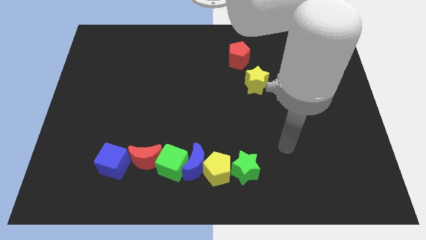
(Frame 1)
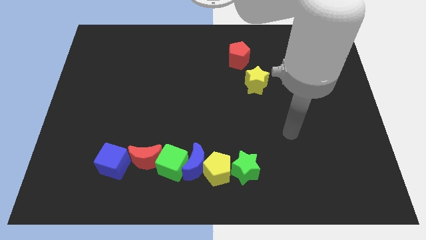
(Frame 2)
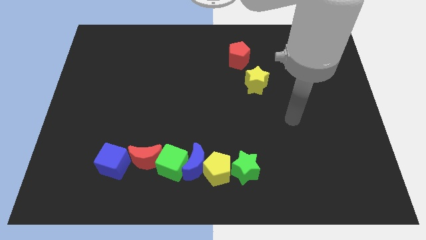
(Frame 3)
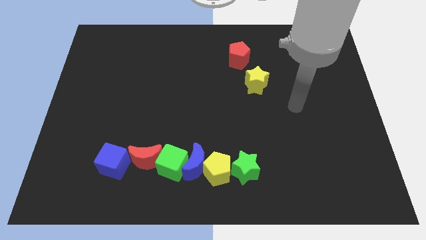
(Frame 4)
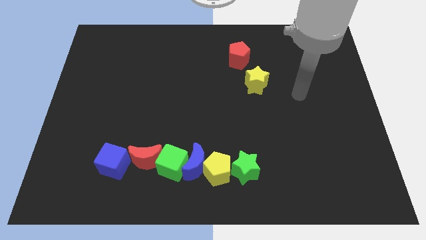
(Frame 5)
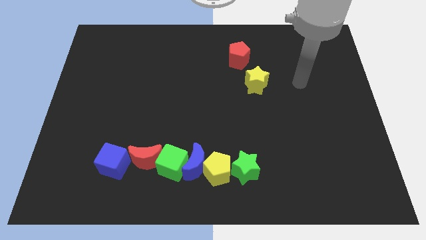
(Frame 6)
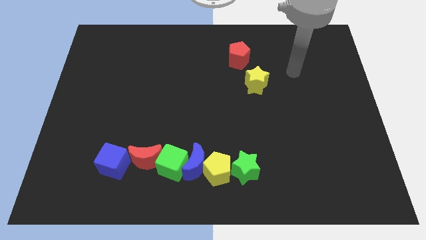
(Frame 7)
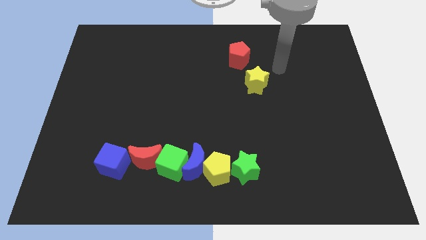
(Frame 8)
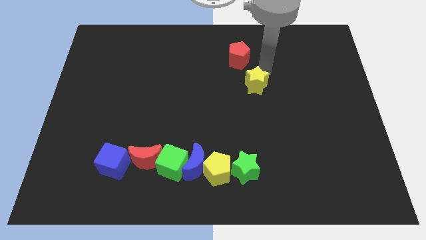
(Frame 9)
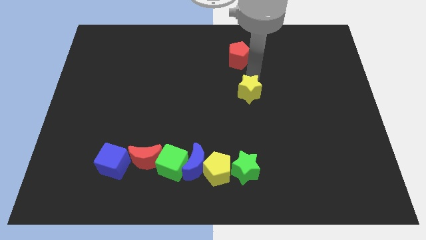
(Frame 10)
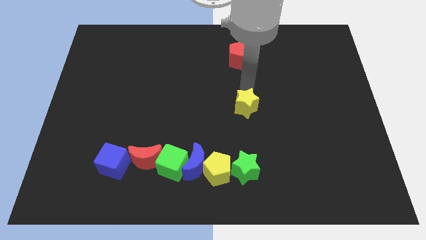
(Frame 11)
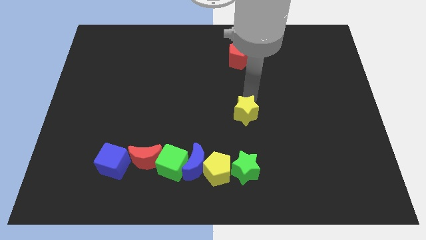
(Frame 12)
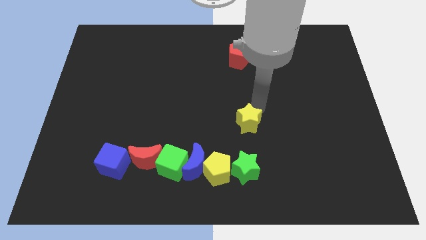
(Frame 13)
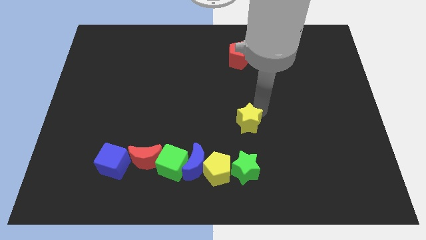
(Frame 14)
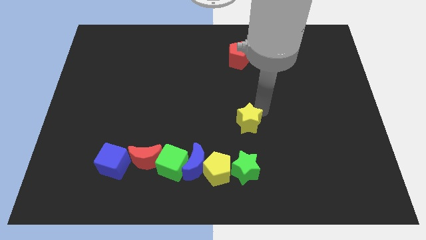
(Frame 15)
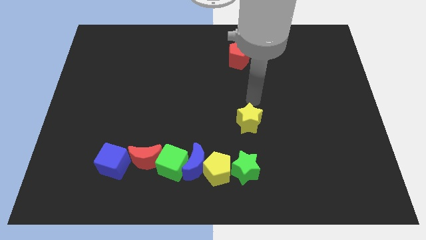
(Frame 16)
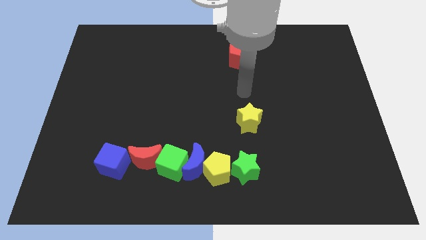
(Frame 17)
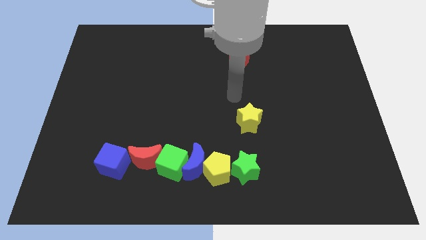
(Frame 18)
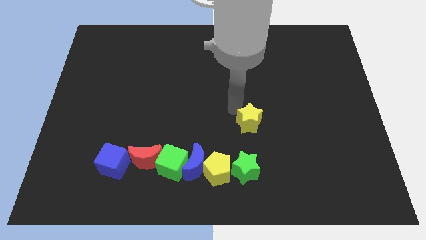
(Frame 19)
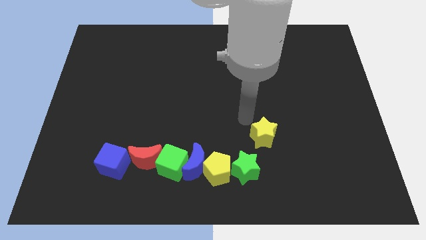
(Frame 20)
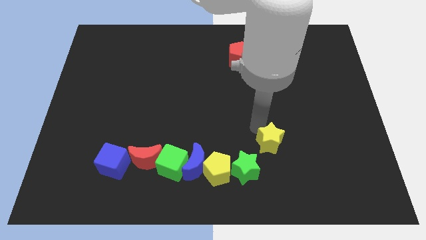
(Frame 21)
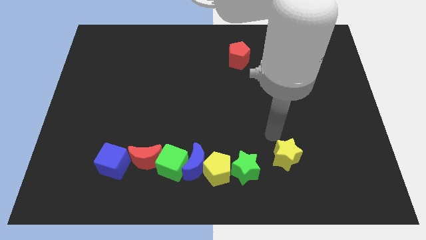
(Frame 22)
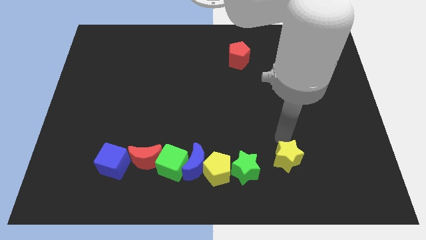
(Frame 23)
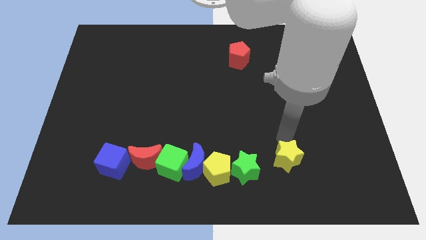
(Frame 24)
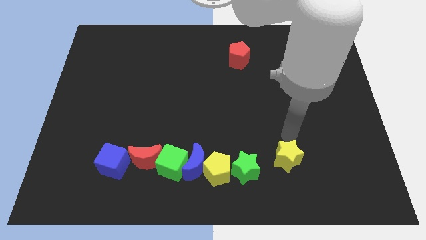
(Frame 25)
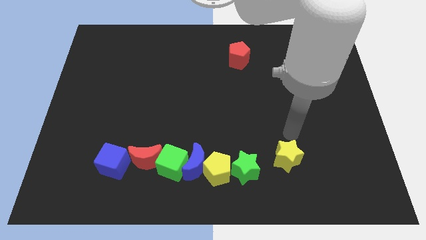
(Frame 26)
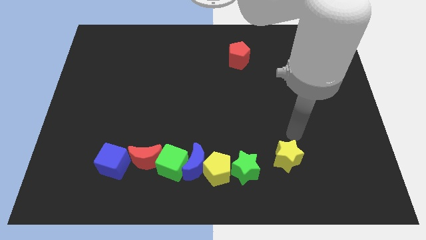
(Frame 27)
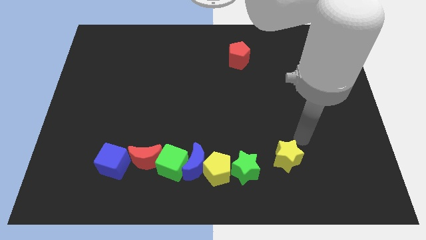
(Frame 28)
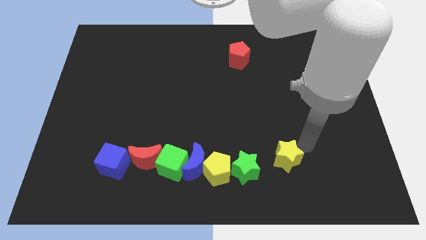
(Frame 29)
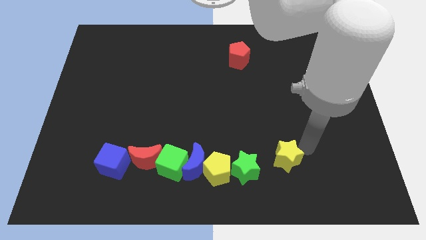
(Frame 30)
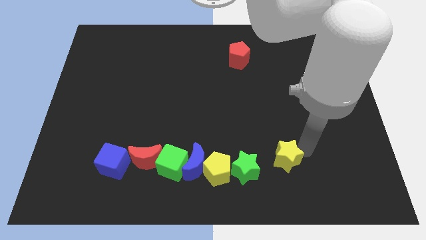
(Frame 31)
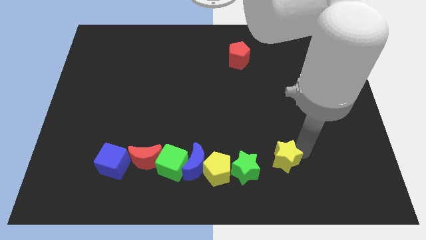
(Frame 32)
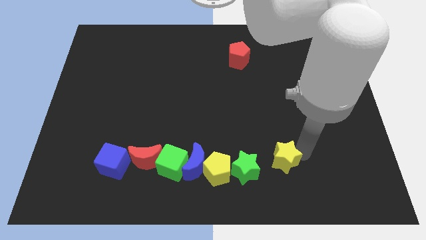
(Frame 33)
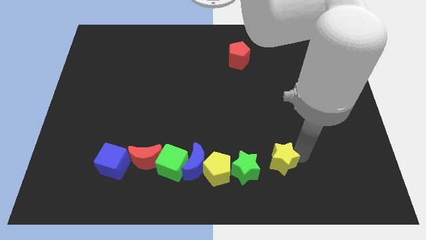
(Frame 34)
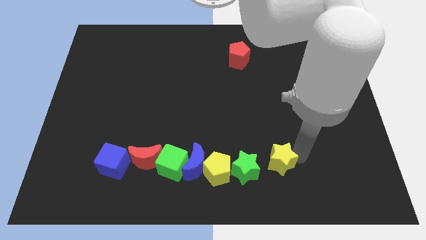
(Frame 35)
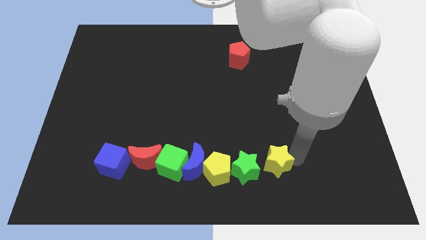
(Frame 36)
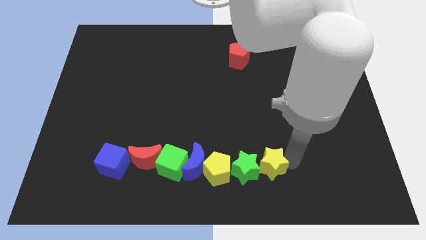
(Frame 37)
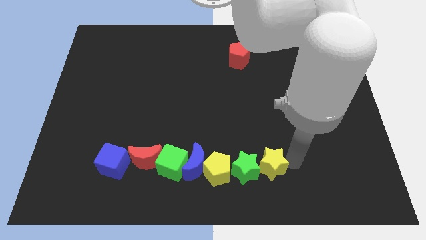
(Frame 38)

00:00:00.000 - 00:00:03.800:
move the yellow star to the right side of the green star

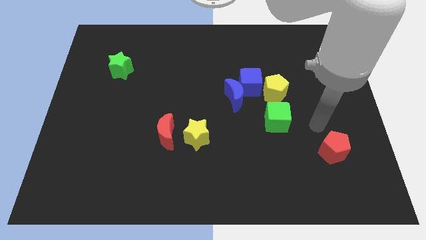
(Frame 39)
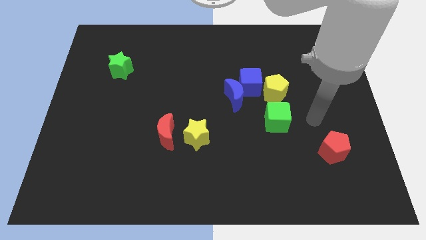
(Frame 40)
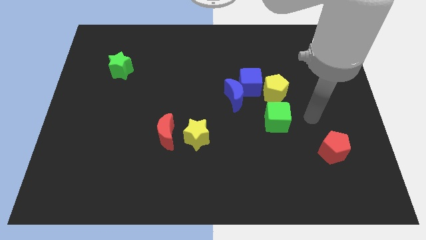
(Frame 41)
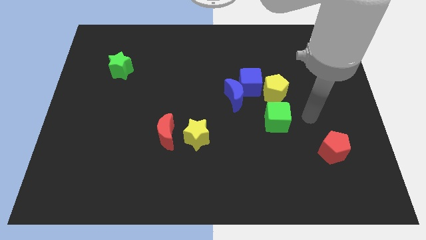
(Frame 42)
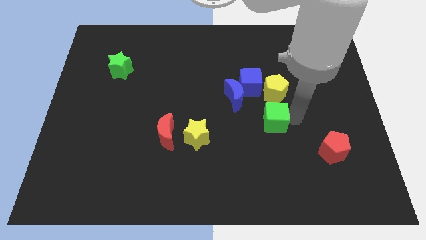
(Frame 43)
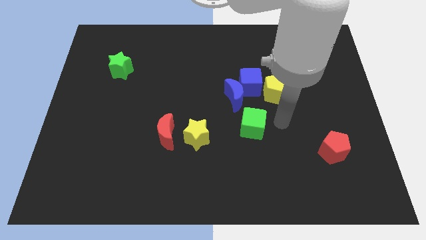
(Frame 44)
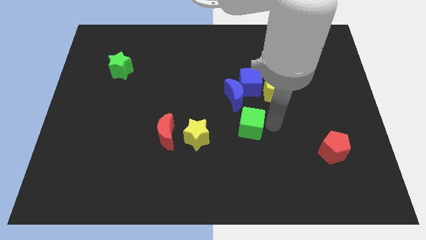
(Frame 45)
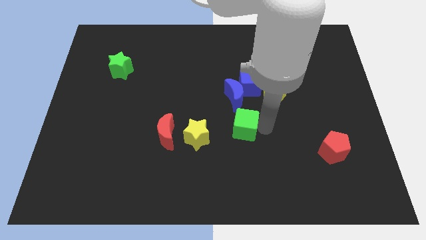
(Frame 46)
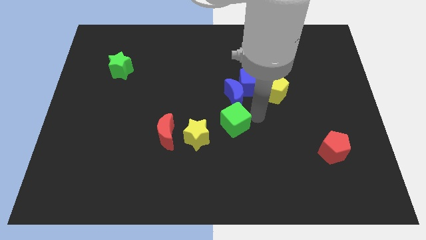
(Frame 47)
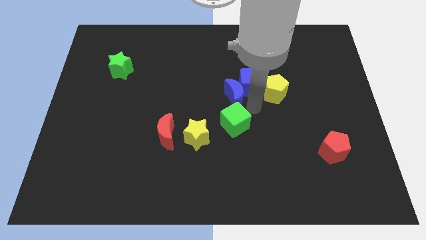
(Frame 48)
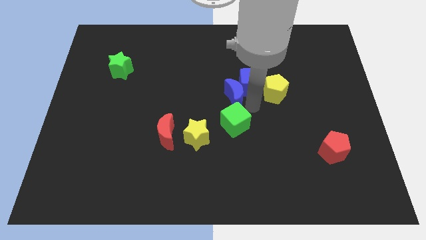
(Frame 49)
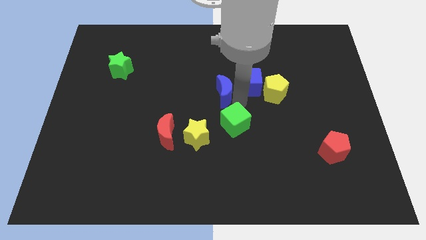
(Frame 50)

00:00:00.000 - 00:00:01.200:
move the green cube close to the blue crescent

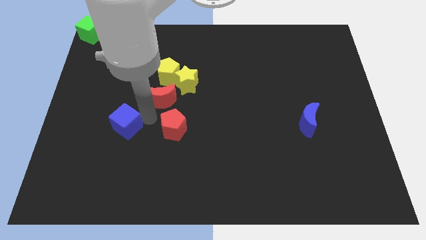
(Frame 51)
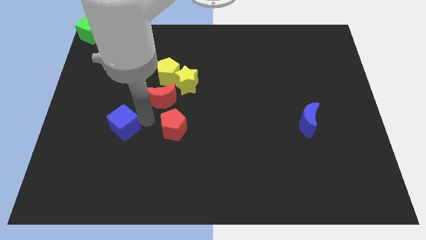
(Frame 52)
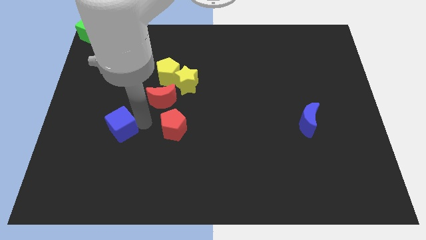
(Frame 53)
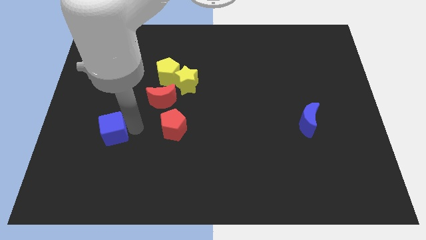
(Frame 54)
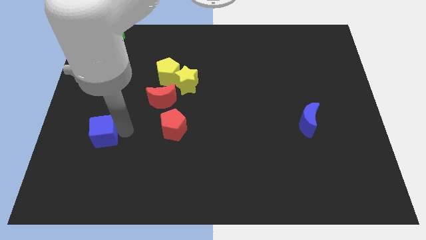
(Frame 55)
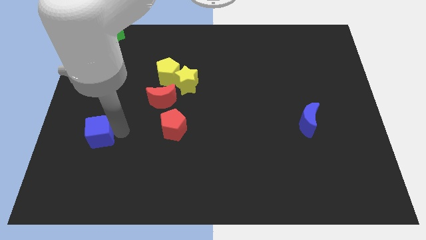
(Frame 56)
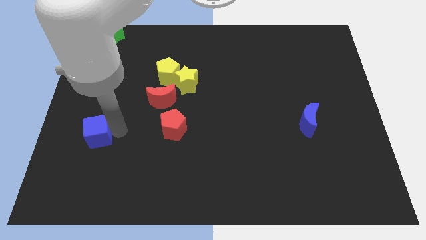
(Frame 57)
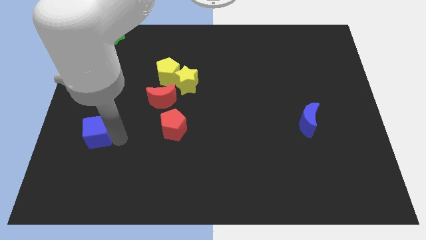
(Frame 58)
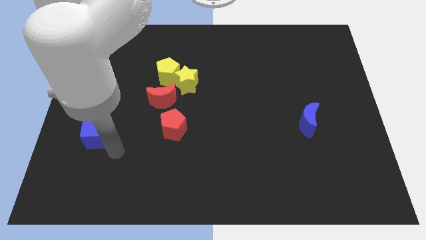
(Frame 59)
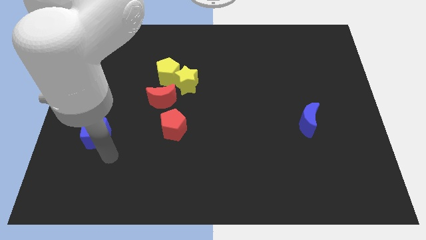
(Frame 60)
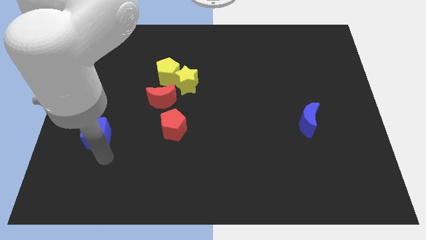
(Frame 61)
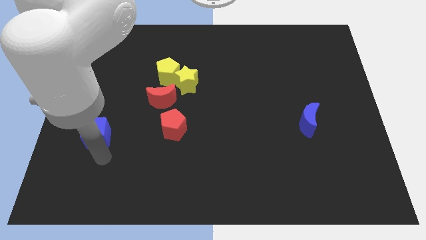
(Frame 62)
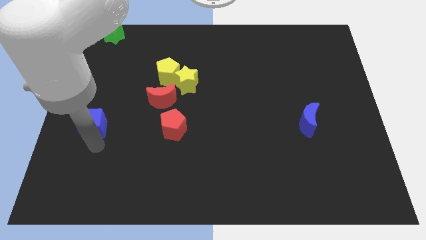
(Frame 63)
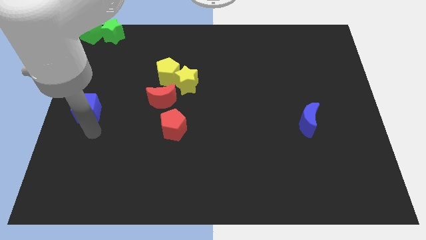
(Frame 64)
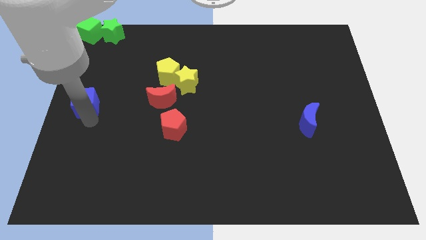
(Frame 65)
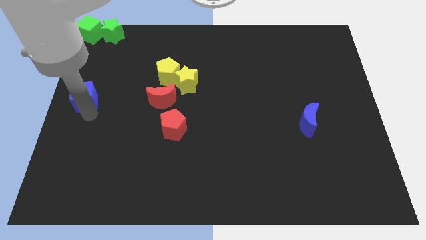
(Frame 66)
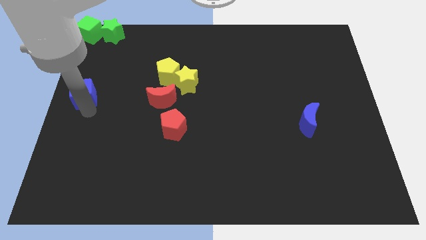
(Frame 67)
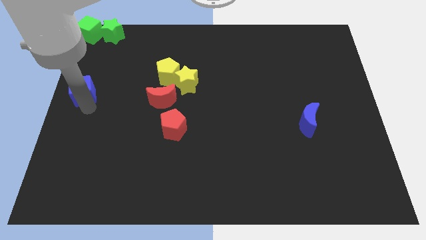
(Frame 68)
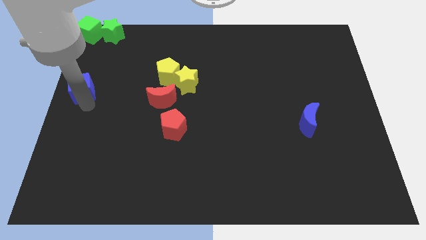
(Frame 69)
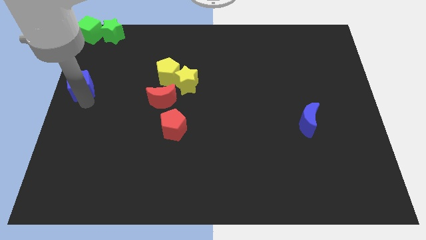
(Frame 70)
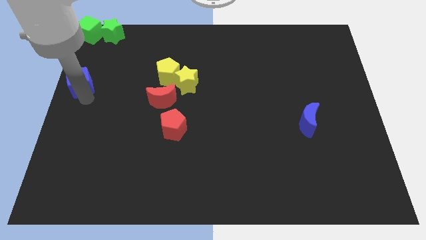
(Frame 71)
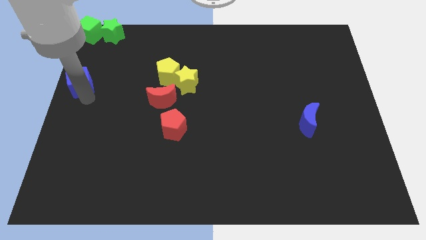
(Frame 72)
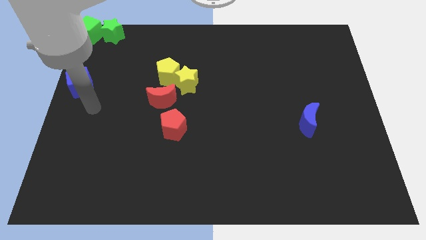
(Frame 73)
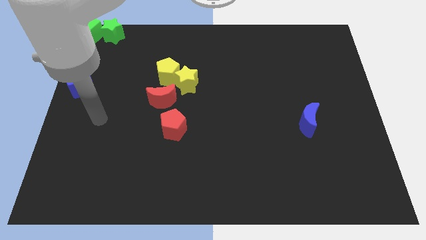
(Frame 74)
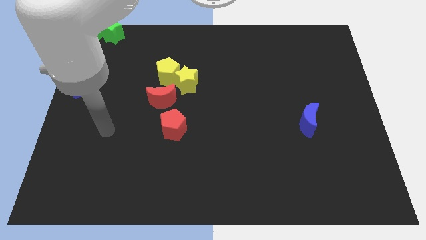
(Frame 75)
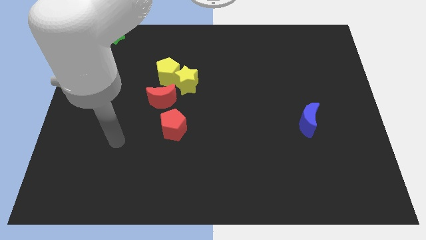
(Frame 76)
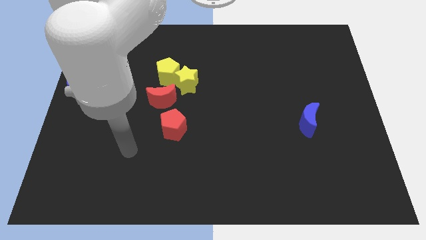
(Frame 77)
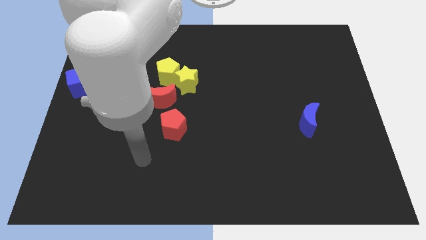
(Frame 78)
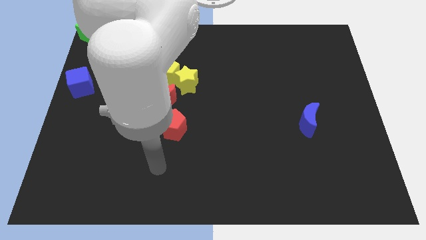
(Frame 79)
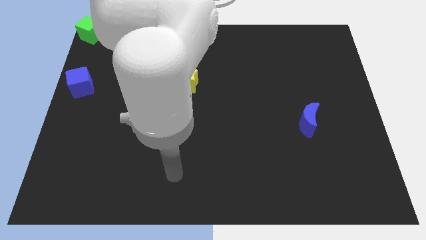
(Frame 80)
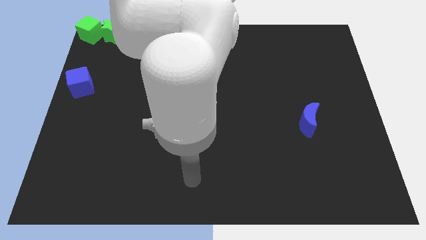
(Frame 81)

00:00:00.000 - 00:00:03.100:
separate blue cube from red blocks

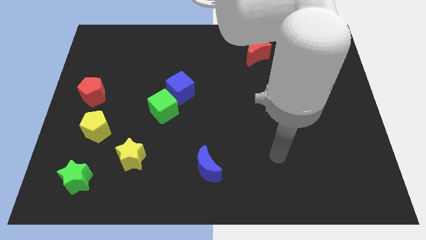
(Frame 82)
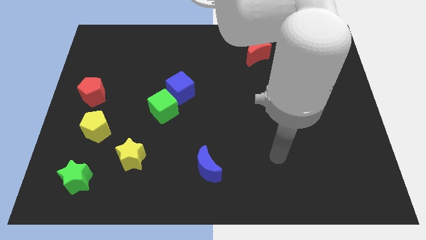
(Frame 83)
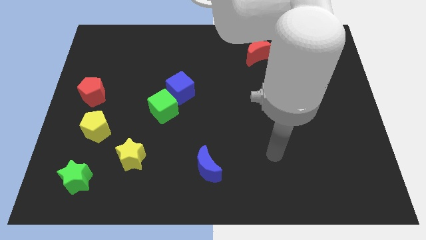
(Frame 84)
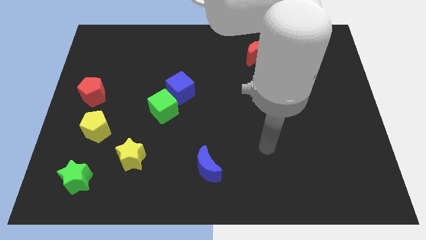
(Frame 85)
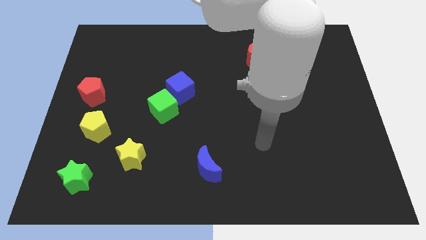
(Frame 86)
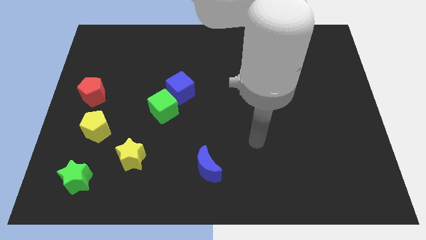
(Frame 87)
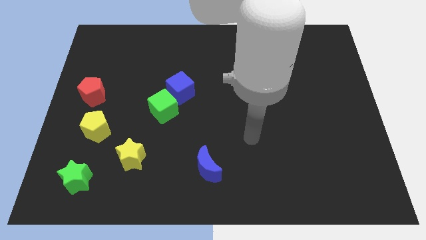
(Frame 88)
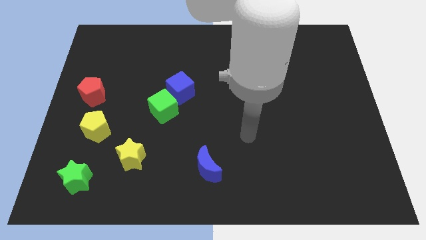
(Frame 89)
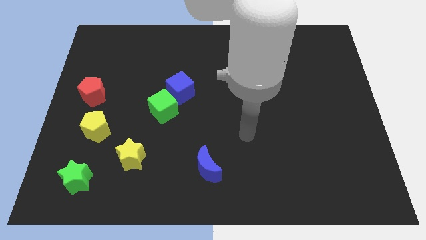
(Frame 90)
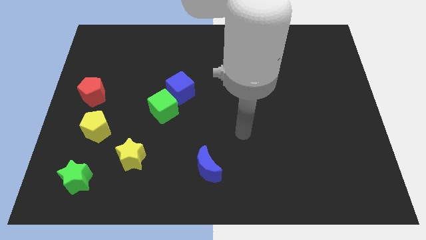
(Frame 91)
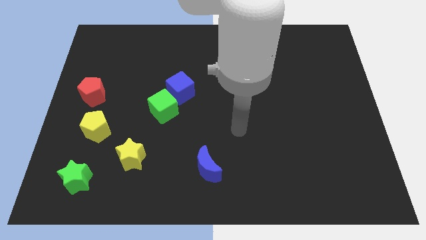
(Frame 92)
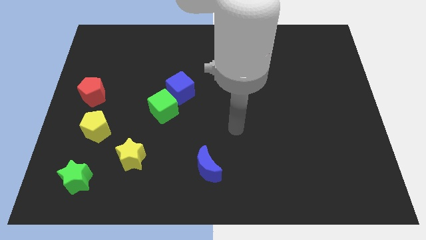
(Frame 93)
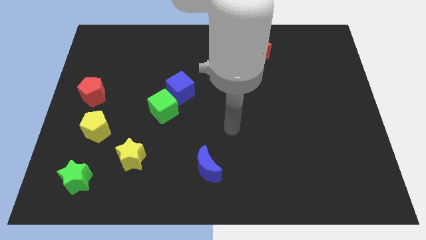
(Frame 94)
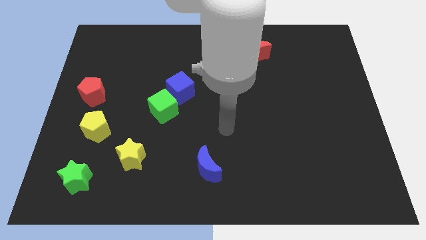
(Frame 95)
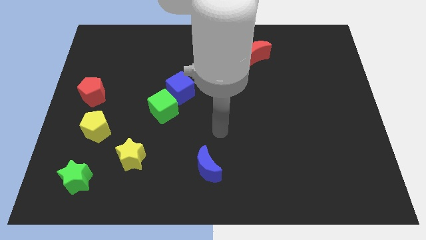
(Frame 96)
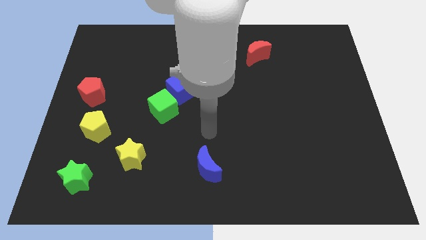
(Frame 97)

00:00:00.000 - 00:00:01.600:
point your hand above the blue moon
